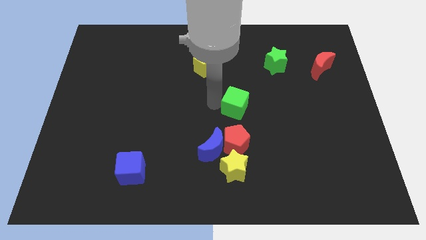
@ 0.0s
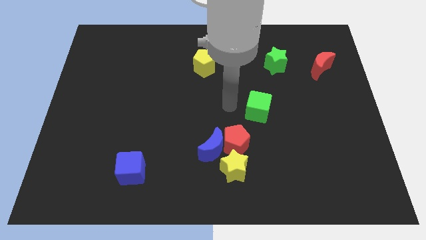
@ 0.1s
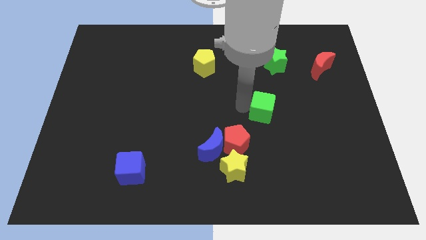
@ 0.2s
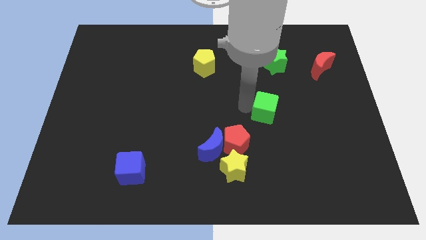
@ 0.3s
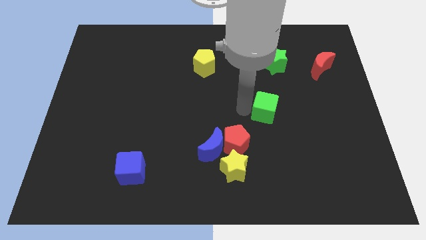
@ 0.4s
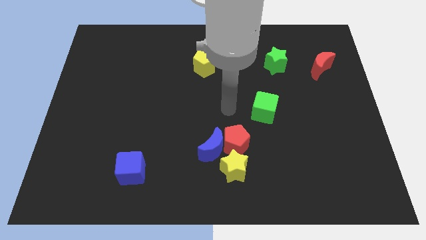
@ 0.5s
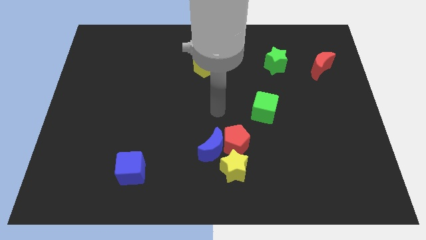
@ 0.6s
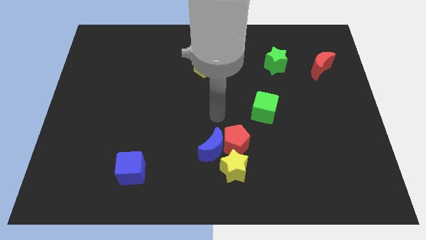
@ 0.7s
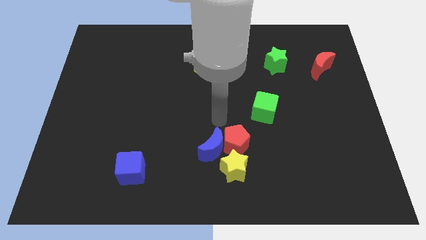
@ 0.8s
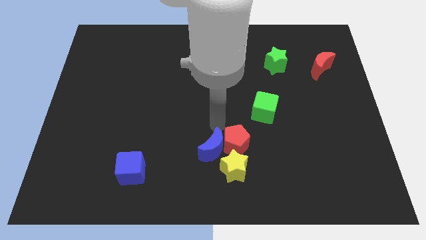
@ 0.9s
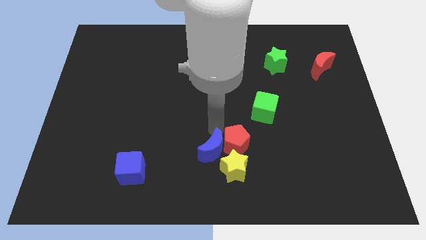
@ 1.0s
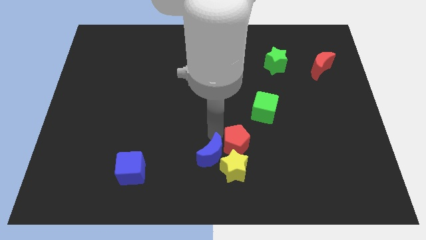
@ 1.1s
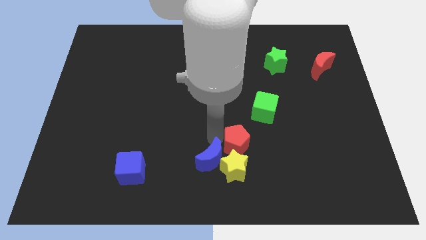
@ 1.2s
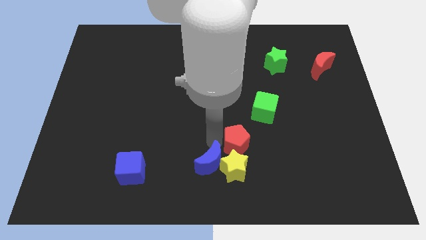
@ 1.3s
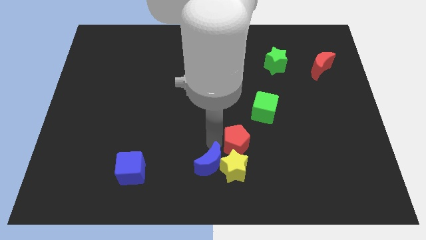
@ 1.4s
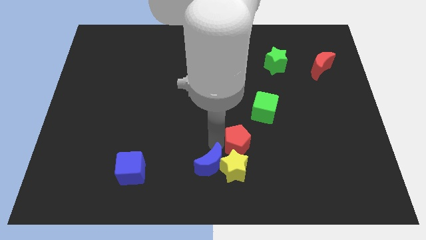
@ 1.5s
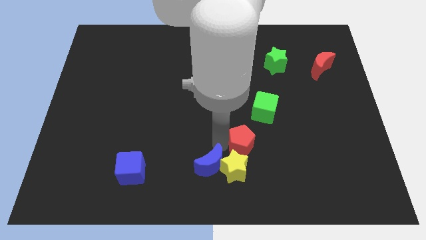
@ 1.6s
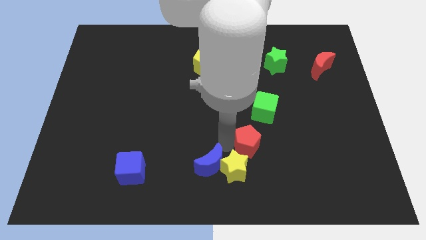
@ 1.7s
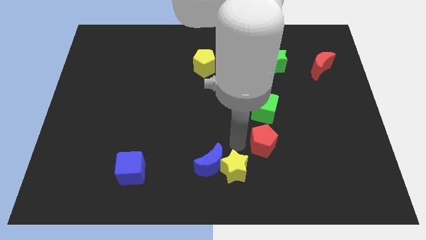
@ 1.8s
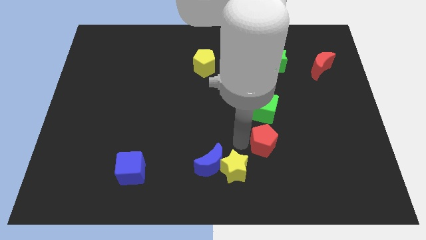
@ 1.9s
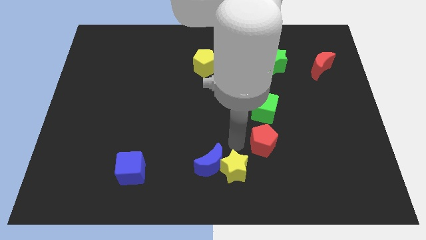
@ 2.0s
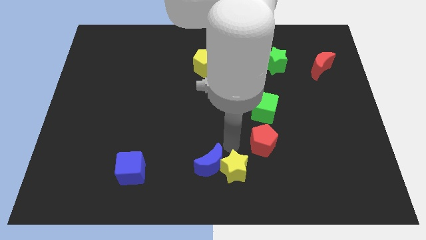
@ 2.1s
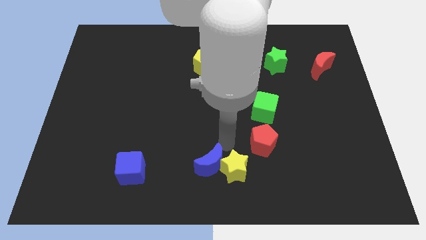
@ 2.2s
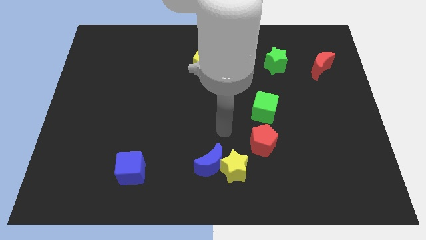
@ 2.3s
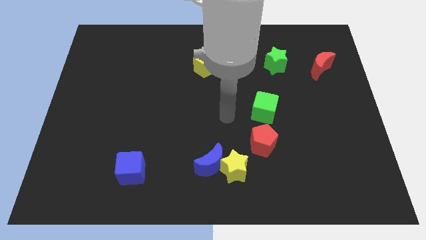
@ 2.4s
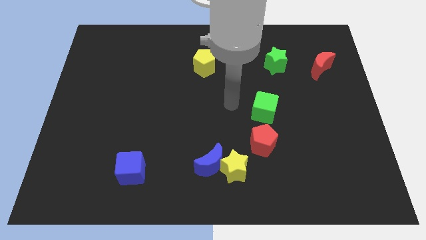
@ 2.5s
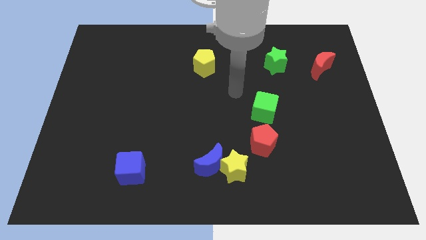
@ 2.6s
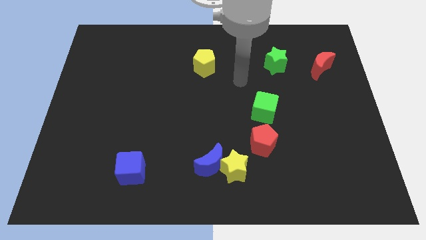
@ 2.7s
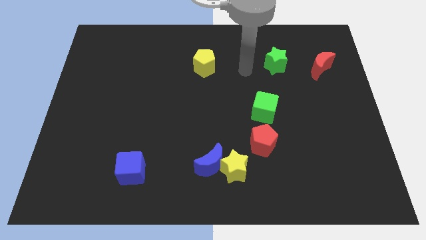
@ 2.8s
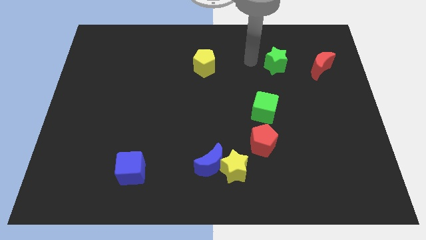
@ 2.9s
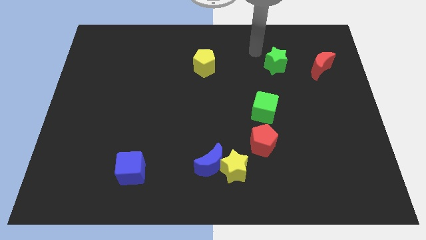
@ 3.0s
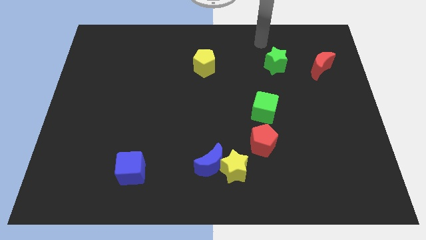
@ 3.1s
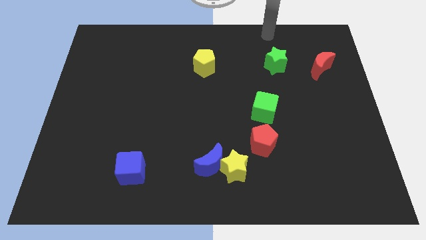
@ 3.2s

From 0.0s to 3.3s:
separate the red pentagon and the yellow star

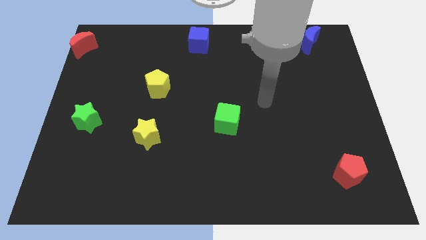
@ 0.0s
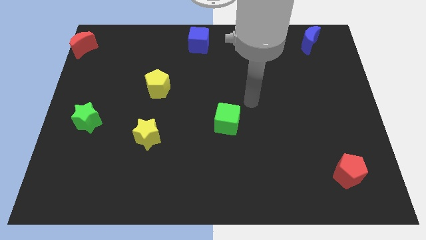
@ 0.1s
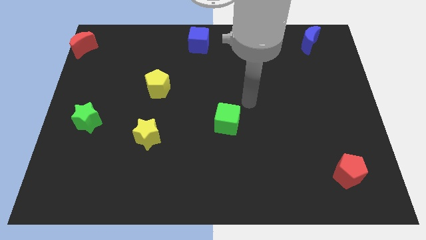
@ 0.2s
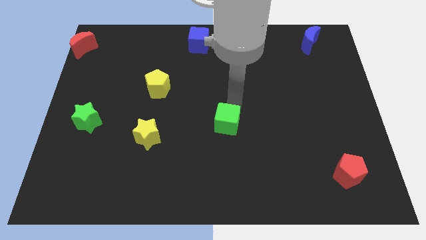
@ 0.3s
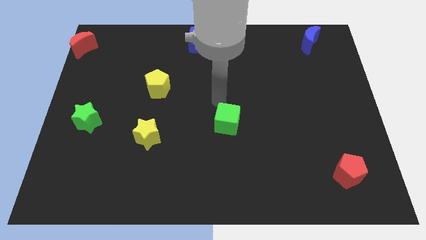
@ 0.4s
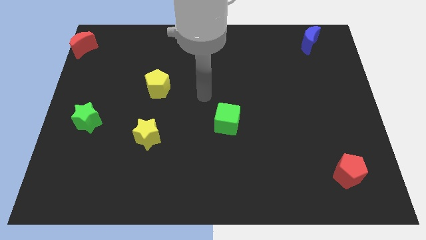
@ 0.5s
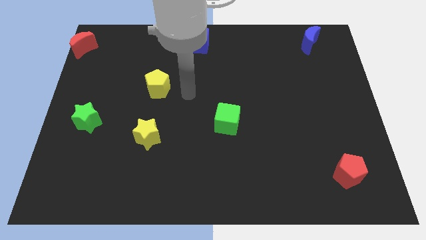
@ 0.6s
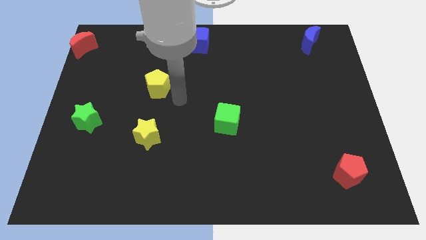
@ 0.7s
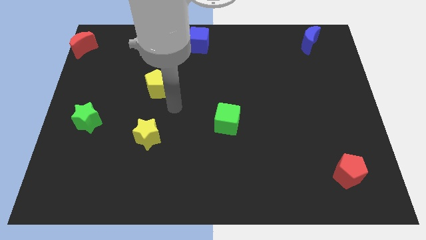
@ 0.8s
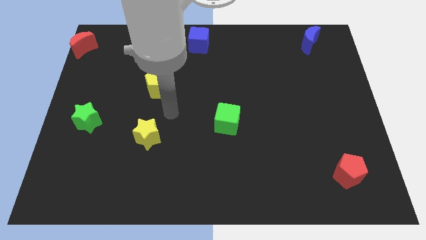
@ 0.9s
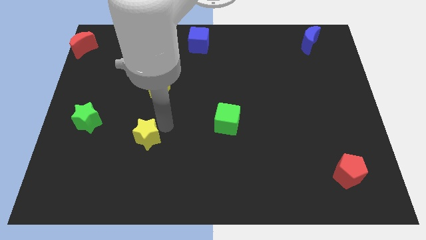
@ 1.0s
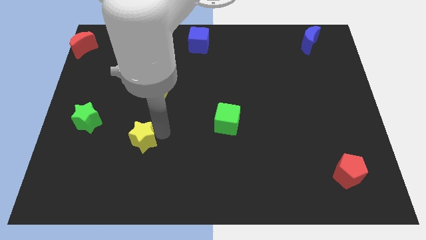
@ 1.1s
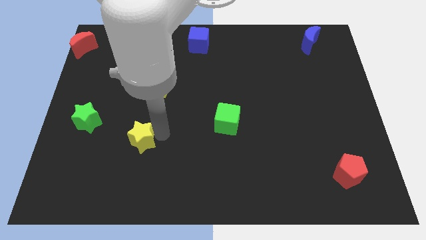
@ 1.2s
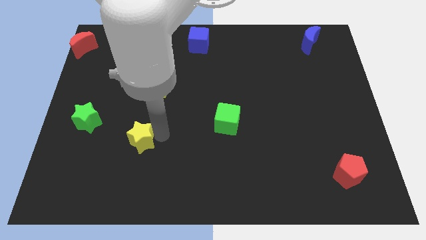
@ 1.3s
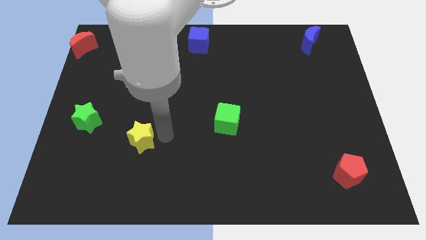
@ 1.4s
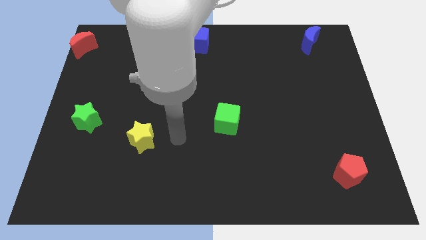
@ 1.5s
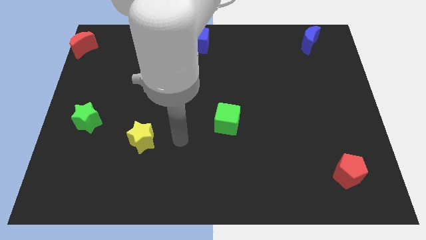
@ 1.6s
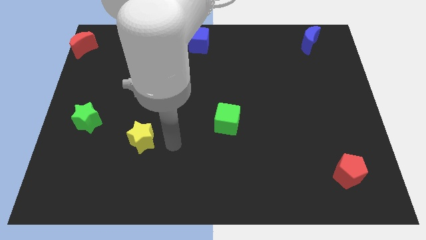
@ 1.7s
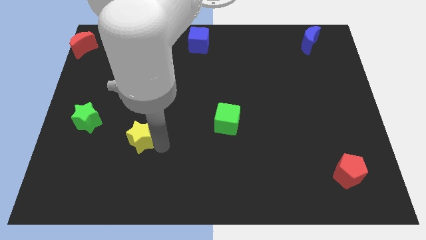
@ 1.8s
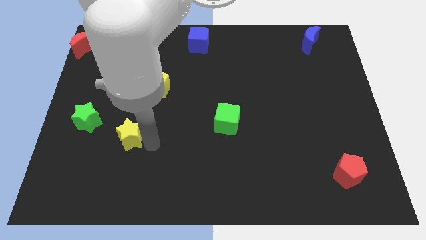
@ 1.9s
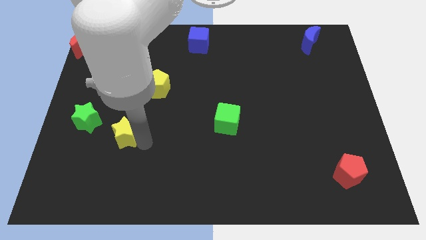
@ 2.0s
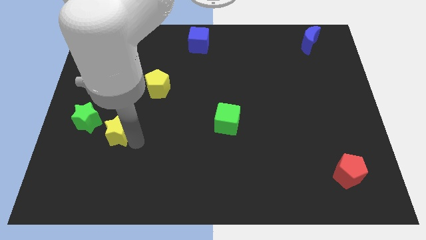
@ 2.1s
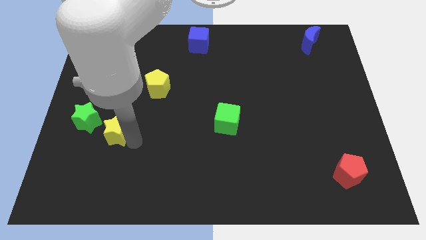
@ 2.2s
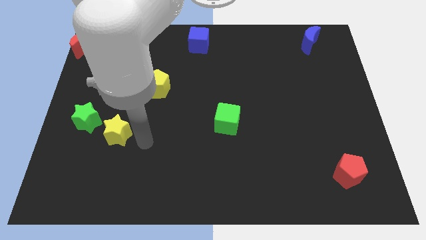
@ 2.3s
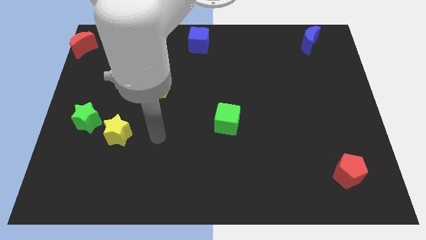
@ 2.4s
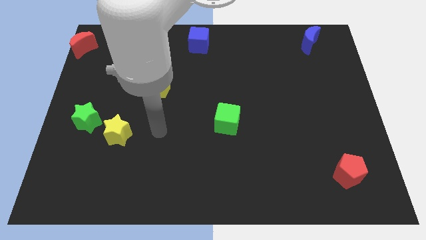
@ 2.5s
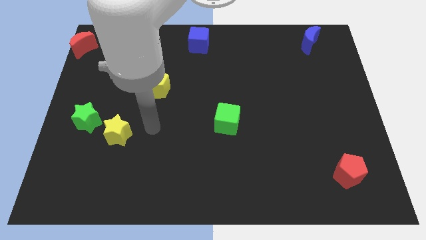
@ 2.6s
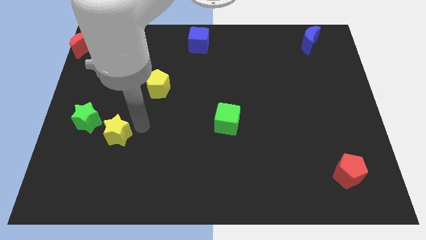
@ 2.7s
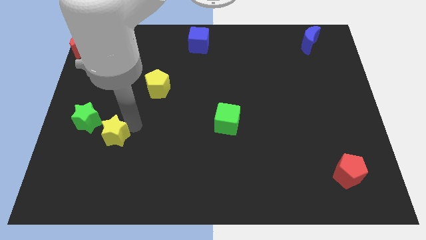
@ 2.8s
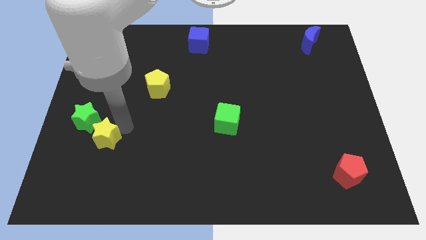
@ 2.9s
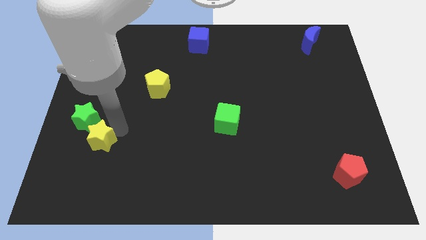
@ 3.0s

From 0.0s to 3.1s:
move the yellow star near to the green star

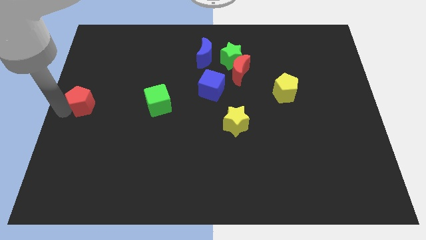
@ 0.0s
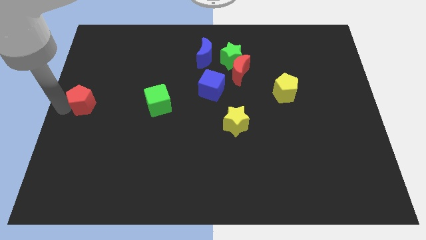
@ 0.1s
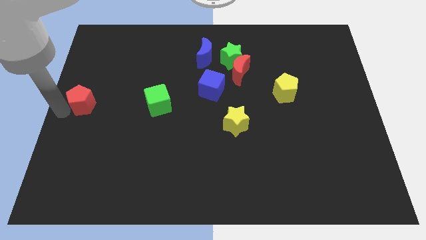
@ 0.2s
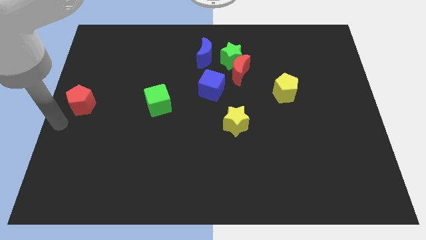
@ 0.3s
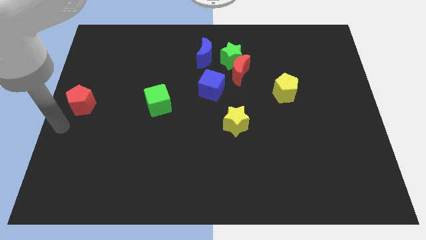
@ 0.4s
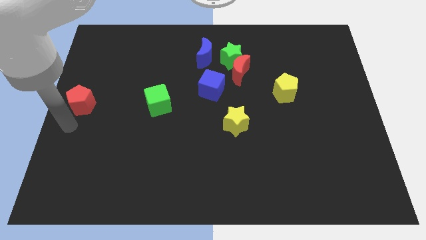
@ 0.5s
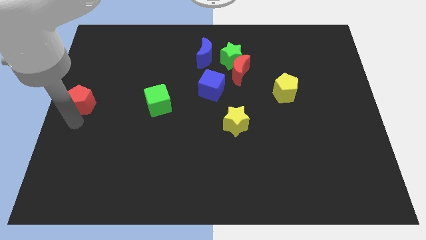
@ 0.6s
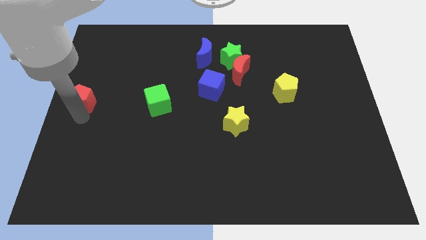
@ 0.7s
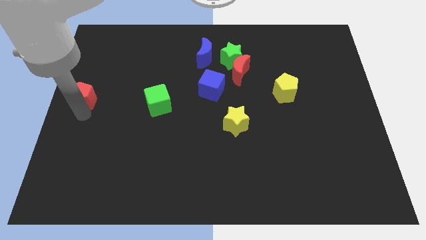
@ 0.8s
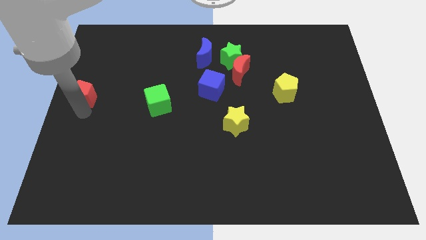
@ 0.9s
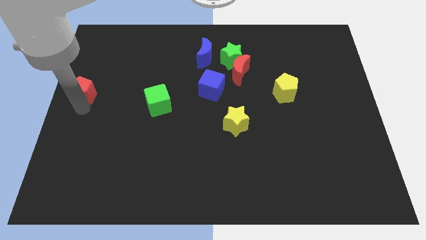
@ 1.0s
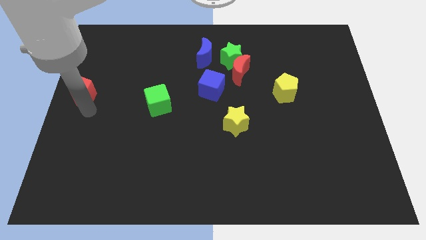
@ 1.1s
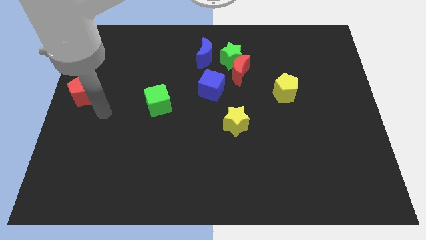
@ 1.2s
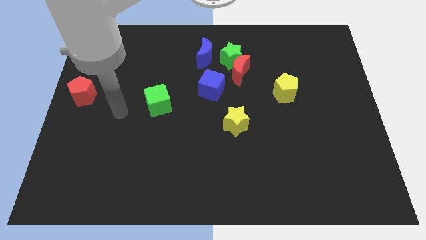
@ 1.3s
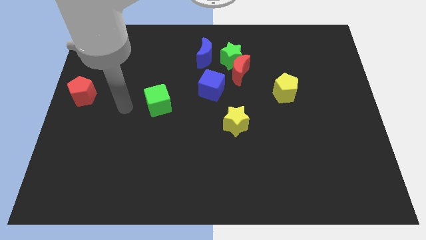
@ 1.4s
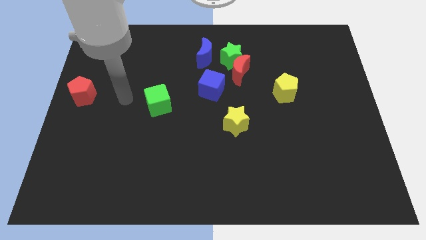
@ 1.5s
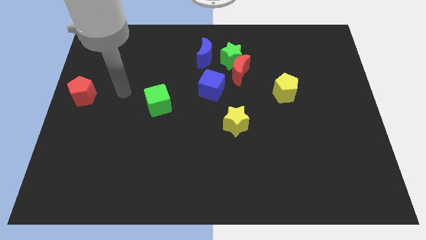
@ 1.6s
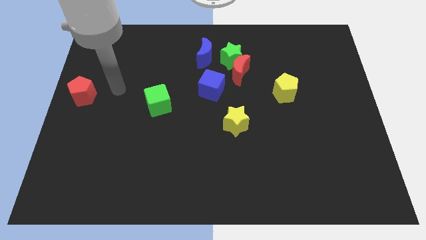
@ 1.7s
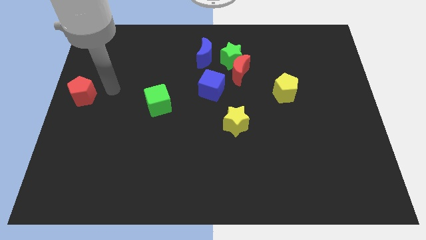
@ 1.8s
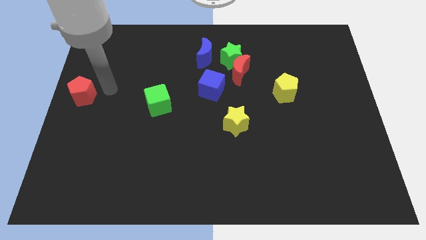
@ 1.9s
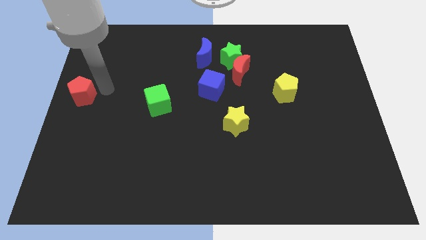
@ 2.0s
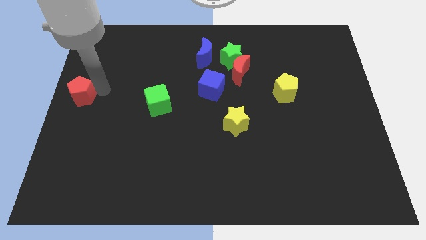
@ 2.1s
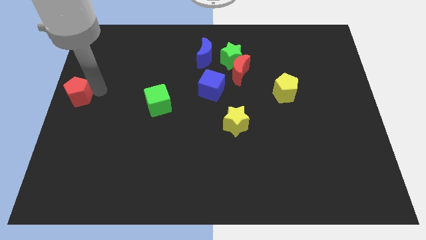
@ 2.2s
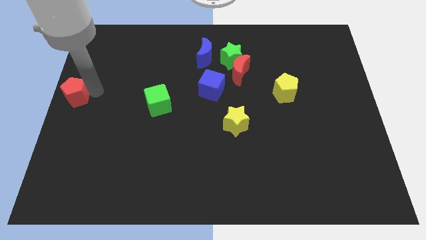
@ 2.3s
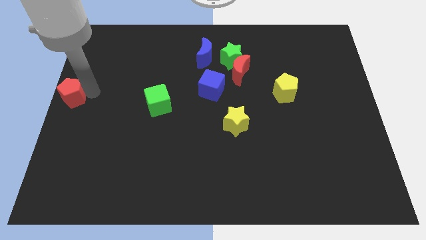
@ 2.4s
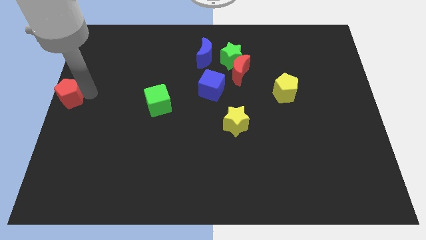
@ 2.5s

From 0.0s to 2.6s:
move the red pentagon to the left center of the board

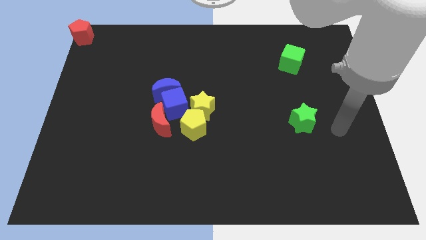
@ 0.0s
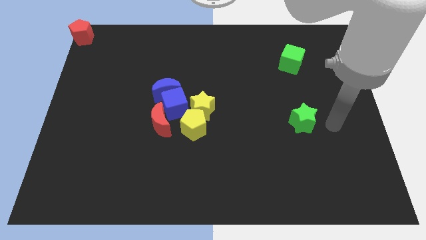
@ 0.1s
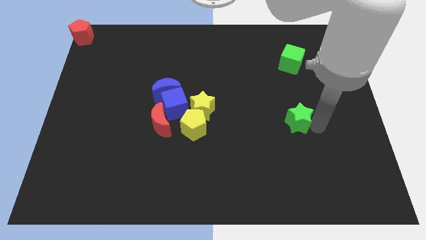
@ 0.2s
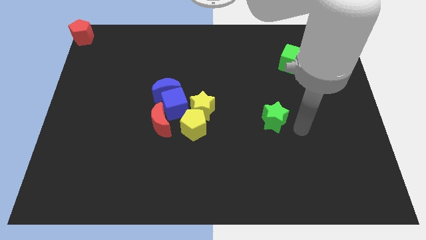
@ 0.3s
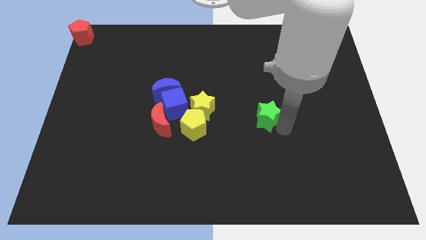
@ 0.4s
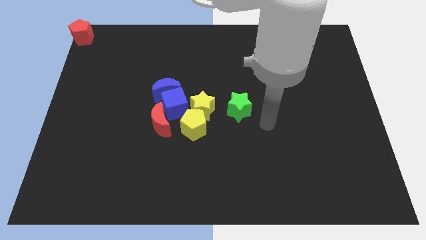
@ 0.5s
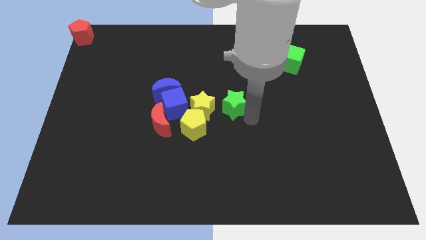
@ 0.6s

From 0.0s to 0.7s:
place the green star to the right of the yellow star
